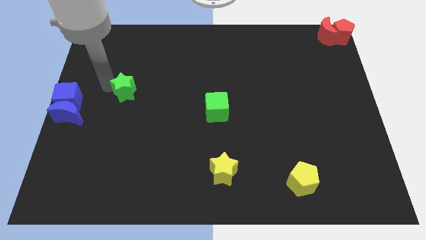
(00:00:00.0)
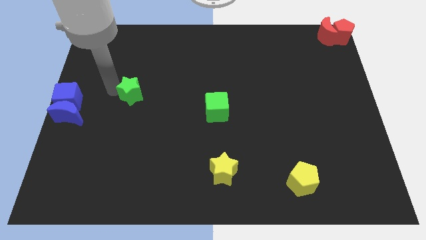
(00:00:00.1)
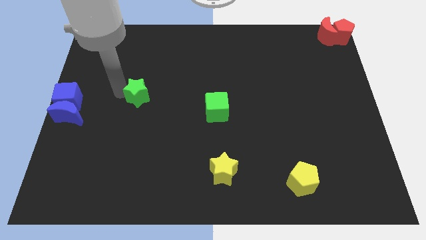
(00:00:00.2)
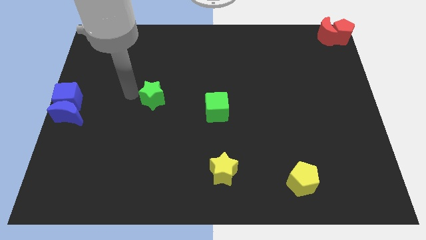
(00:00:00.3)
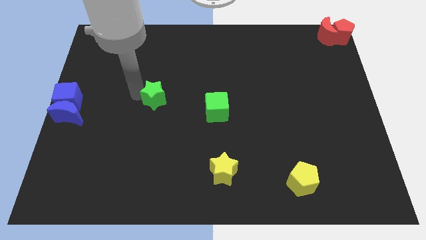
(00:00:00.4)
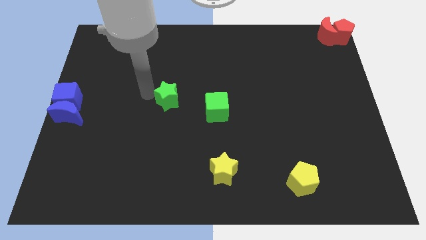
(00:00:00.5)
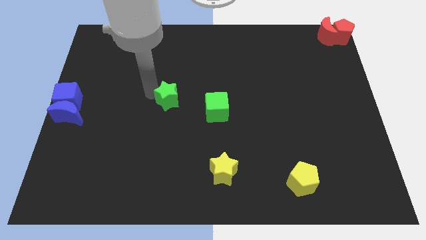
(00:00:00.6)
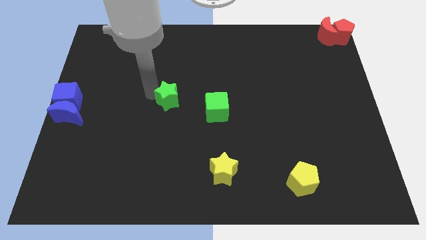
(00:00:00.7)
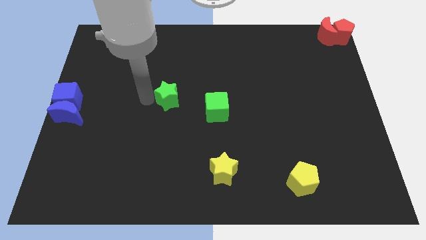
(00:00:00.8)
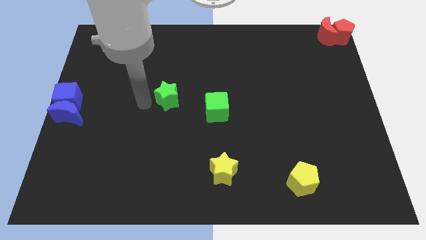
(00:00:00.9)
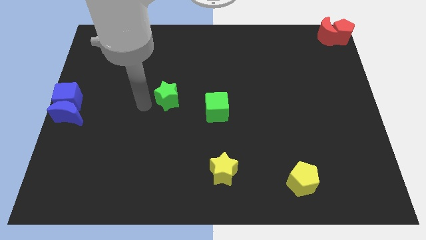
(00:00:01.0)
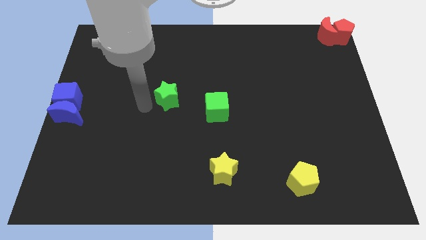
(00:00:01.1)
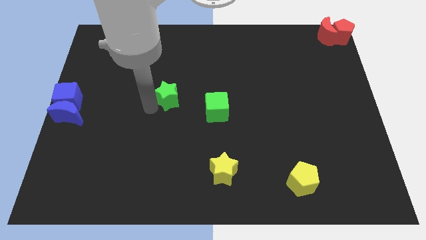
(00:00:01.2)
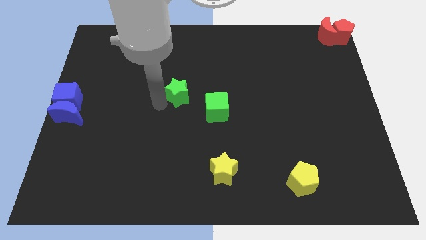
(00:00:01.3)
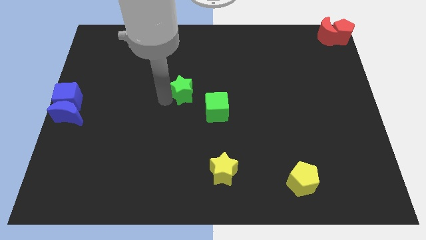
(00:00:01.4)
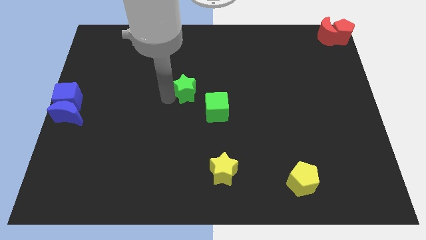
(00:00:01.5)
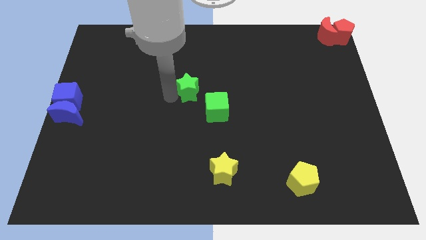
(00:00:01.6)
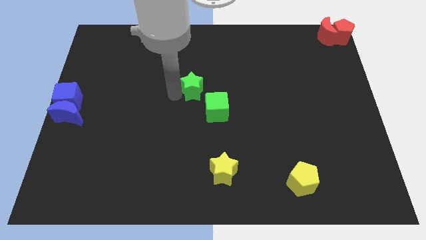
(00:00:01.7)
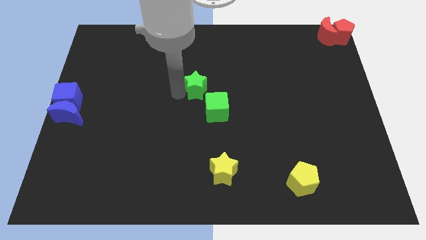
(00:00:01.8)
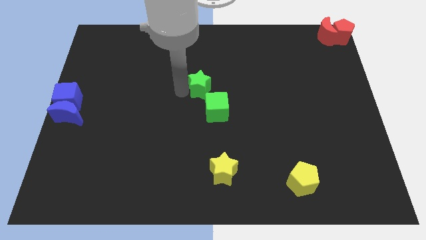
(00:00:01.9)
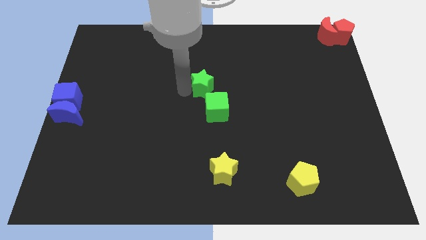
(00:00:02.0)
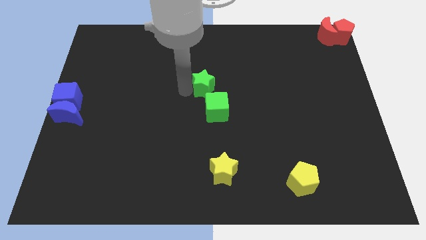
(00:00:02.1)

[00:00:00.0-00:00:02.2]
put the green star above the green cube

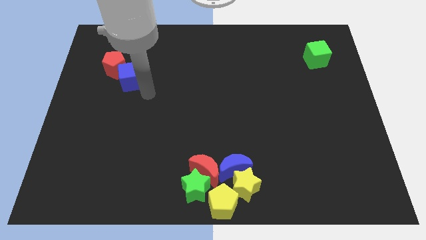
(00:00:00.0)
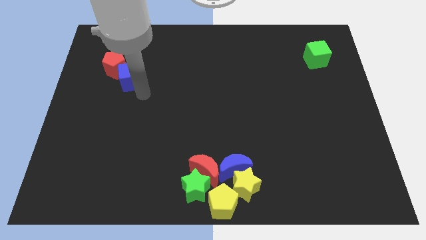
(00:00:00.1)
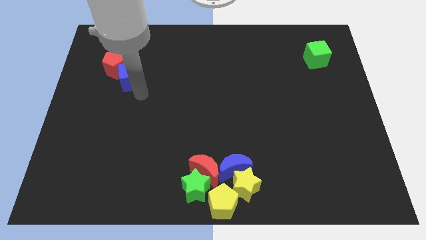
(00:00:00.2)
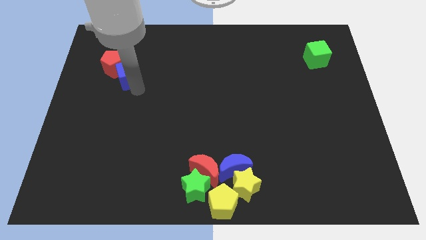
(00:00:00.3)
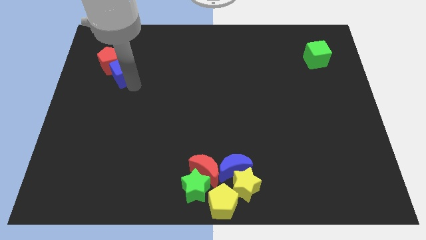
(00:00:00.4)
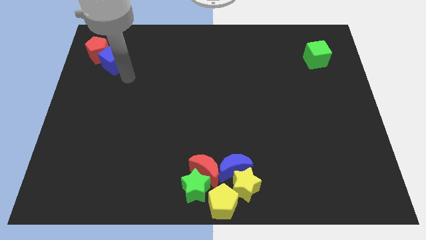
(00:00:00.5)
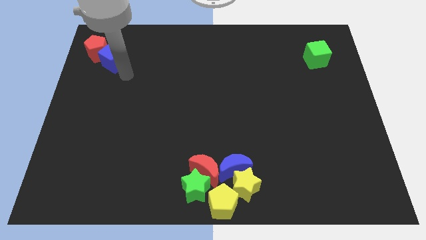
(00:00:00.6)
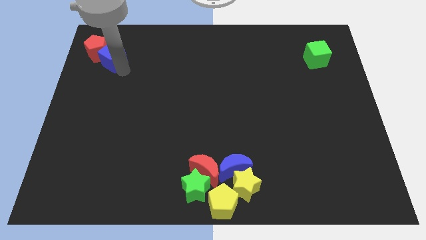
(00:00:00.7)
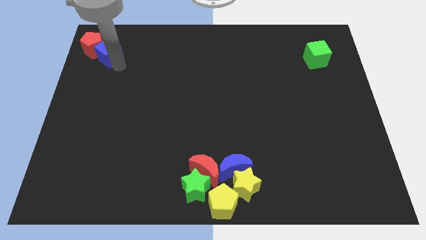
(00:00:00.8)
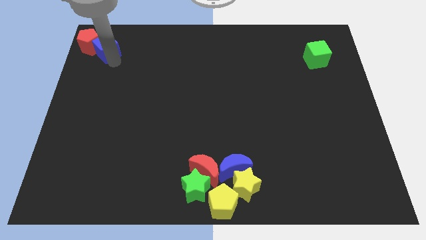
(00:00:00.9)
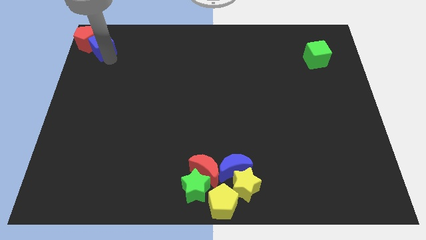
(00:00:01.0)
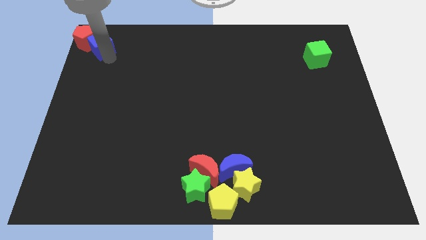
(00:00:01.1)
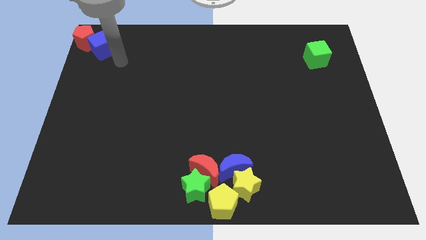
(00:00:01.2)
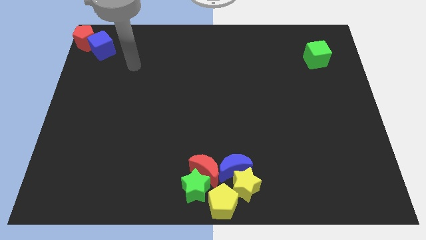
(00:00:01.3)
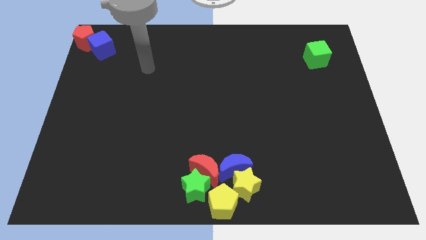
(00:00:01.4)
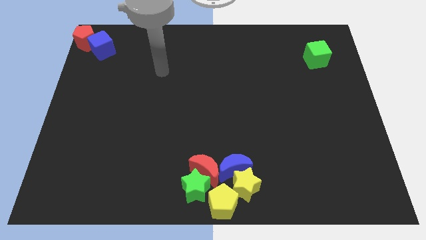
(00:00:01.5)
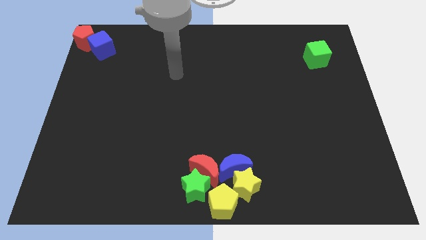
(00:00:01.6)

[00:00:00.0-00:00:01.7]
push red pentagon to the top left corner of board by pushing it with blue cube

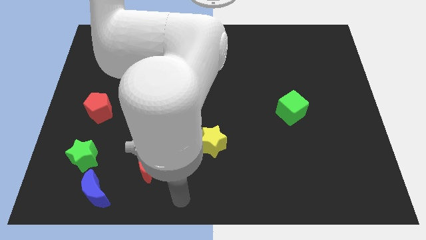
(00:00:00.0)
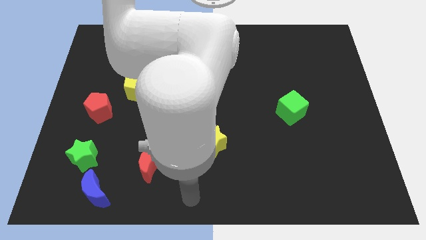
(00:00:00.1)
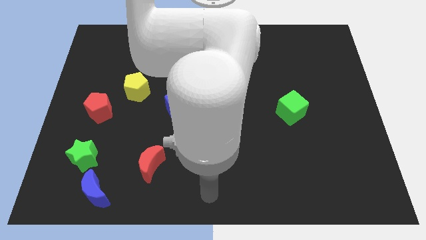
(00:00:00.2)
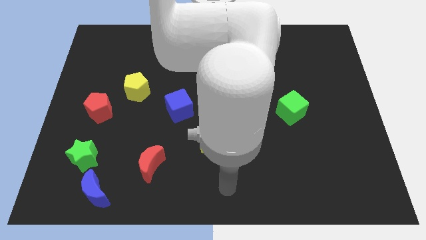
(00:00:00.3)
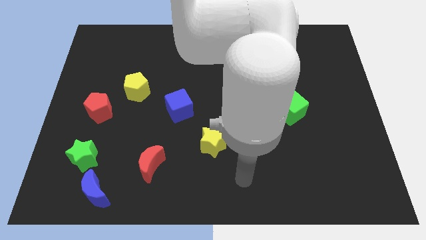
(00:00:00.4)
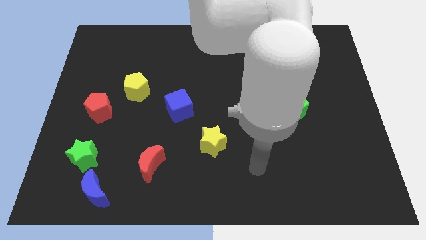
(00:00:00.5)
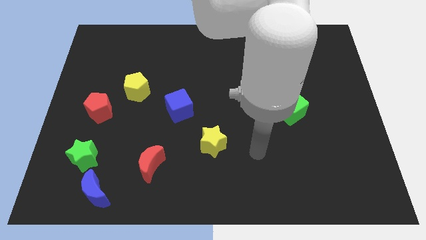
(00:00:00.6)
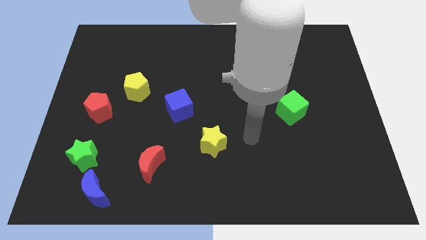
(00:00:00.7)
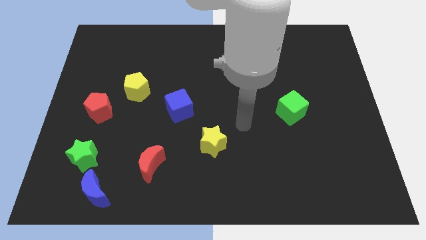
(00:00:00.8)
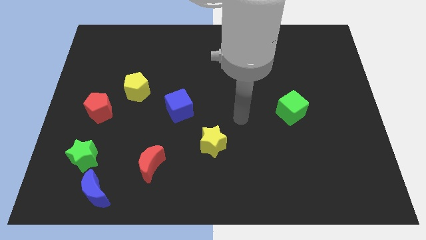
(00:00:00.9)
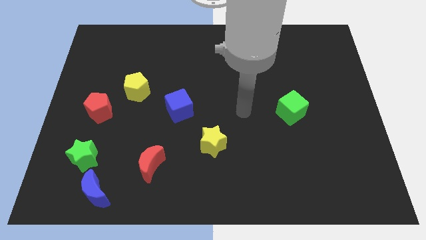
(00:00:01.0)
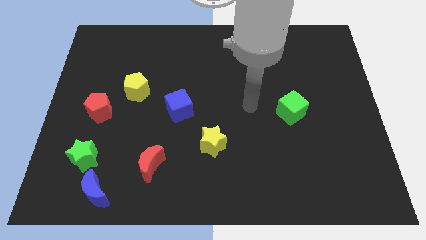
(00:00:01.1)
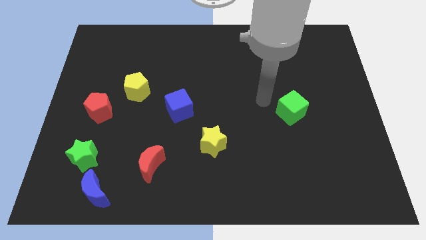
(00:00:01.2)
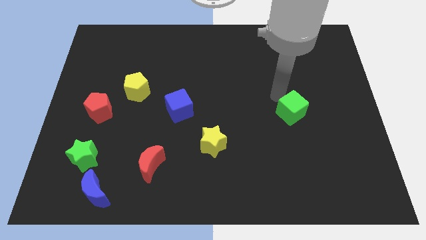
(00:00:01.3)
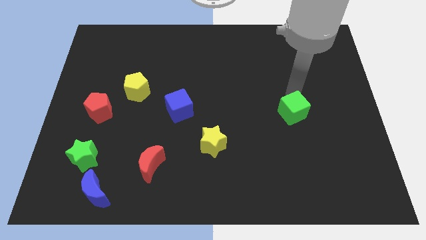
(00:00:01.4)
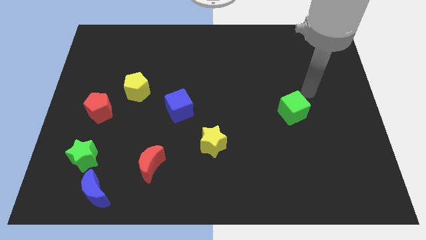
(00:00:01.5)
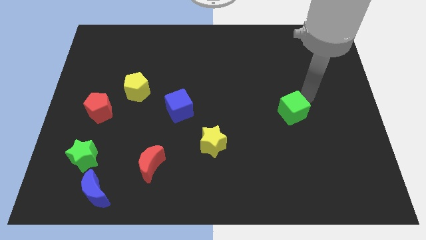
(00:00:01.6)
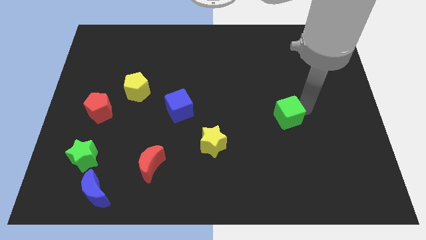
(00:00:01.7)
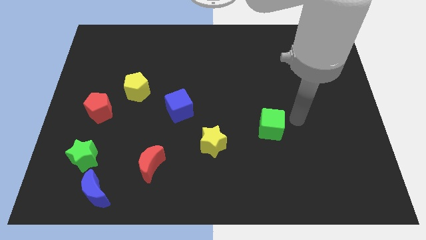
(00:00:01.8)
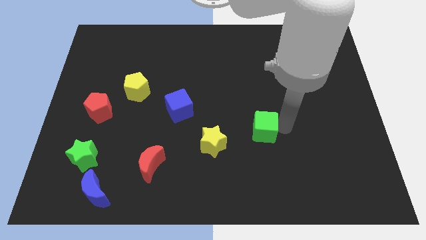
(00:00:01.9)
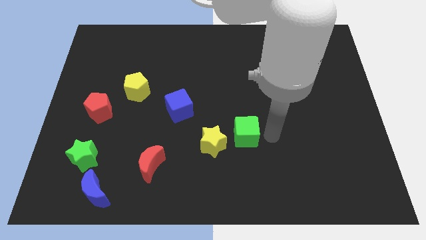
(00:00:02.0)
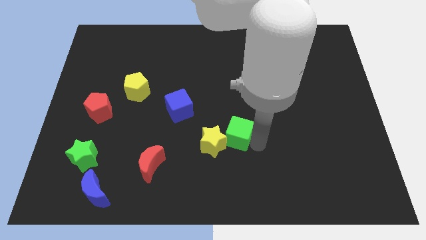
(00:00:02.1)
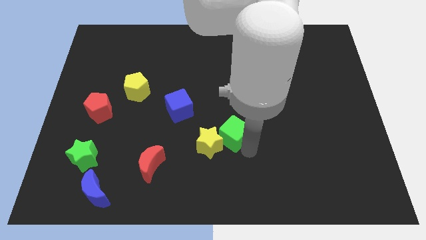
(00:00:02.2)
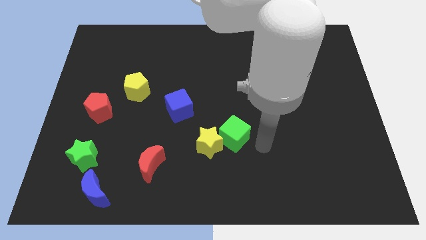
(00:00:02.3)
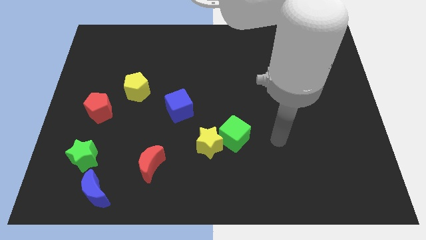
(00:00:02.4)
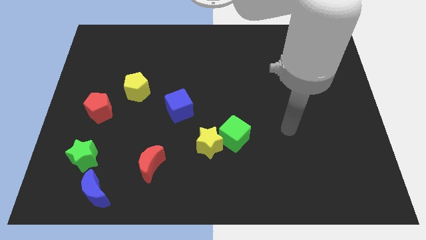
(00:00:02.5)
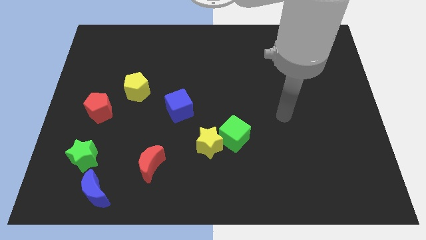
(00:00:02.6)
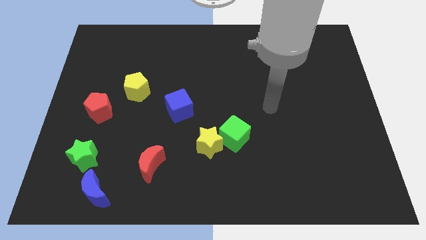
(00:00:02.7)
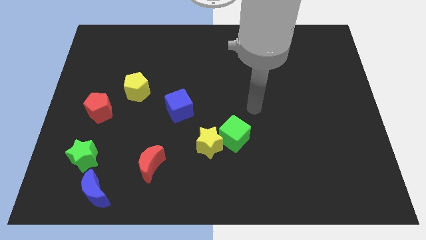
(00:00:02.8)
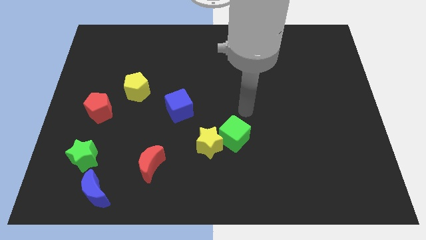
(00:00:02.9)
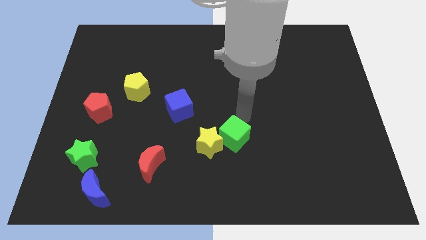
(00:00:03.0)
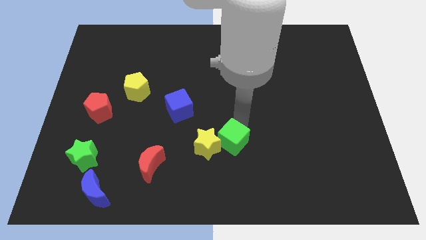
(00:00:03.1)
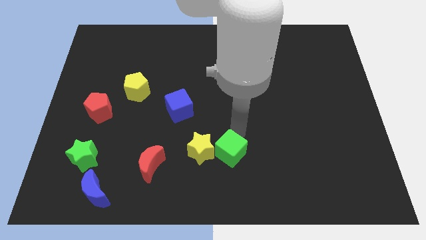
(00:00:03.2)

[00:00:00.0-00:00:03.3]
place the green cube to the right of the yellow star

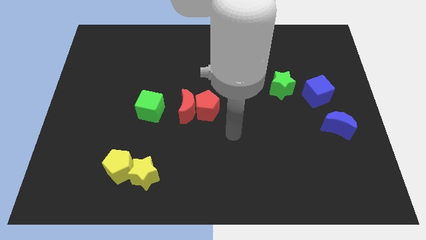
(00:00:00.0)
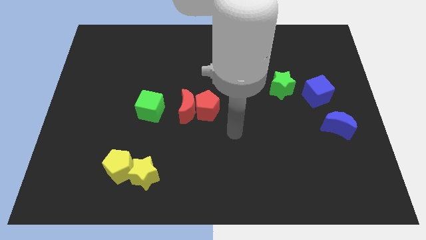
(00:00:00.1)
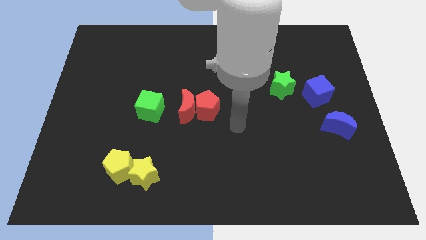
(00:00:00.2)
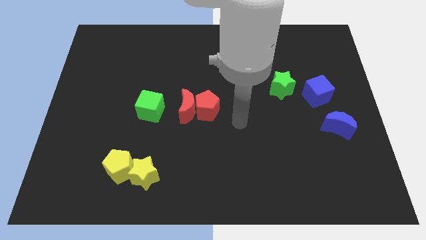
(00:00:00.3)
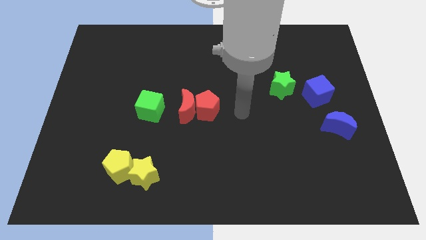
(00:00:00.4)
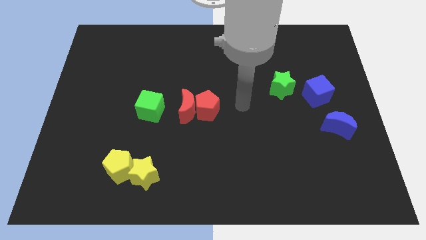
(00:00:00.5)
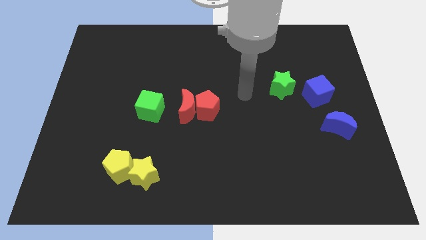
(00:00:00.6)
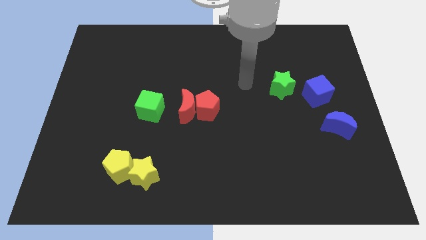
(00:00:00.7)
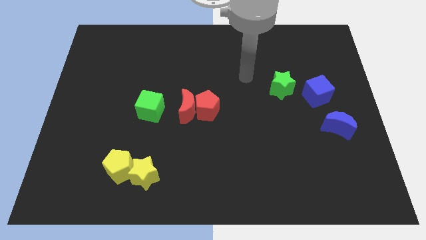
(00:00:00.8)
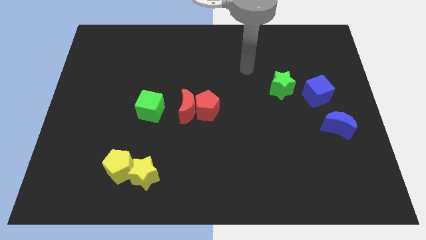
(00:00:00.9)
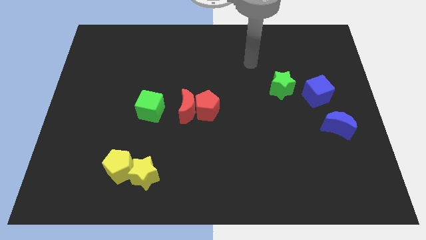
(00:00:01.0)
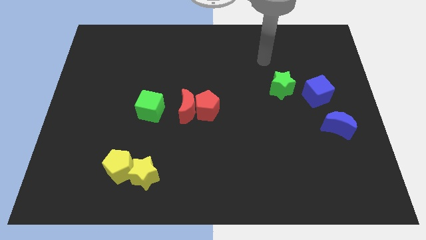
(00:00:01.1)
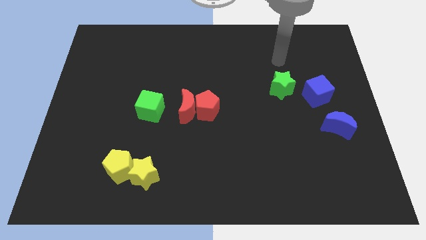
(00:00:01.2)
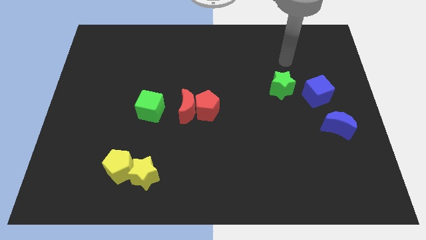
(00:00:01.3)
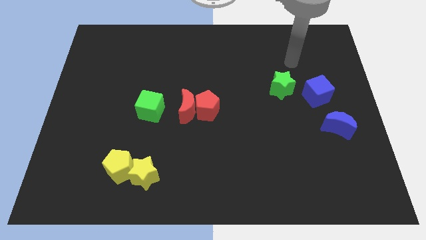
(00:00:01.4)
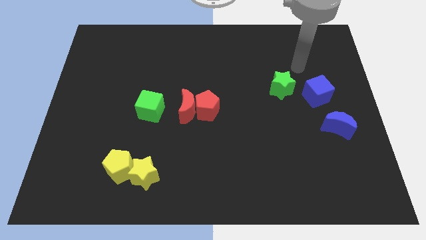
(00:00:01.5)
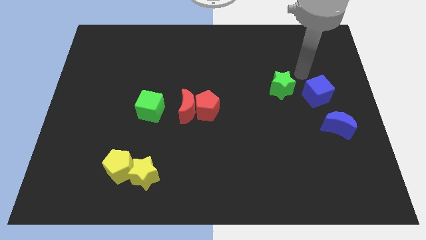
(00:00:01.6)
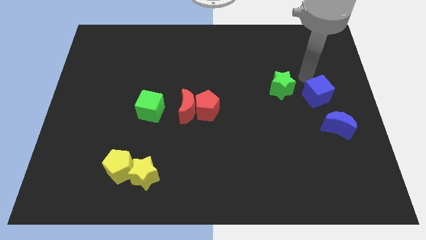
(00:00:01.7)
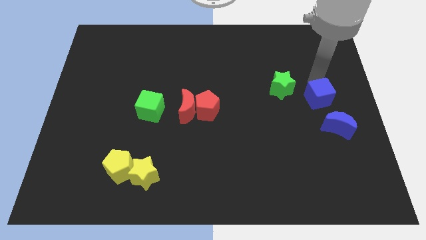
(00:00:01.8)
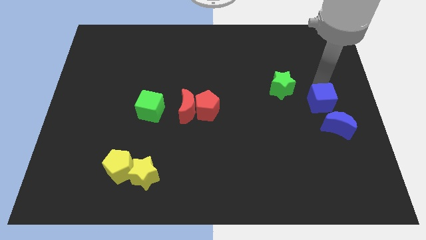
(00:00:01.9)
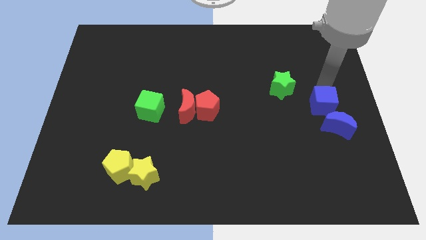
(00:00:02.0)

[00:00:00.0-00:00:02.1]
touch the blue cube
